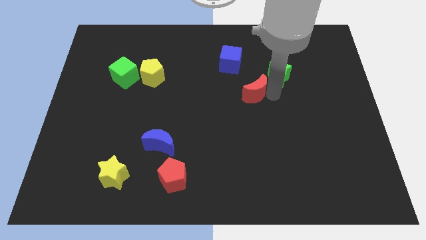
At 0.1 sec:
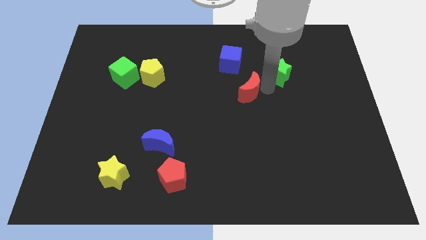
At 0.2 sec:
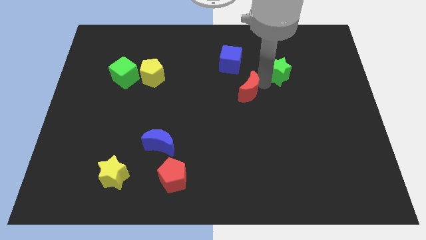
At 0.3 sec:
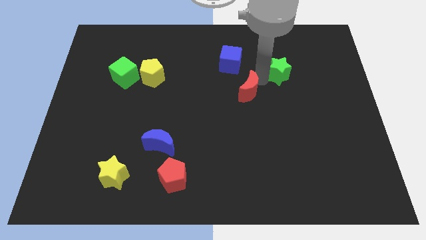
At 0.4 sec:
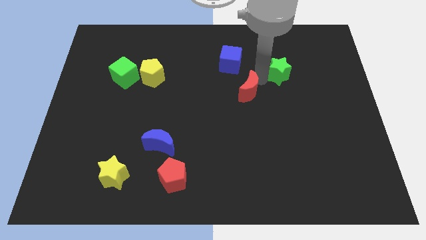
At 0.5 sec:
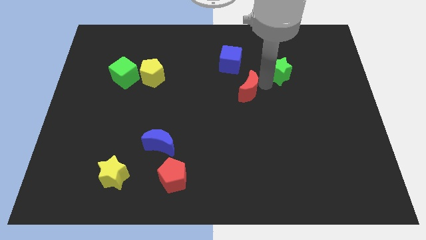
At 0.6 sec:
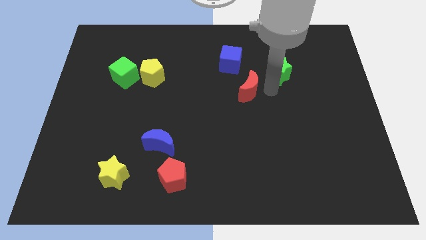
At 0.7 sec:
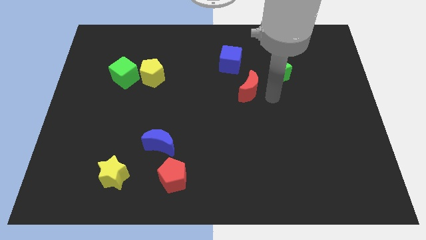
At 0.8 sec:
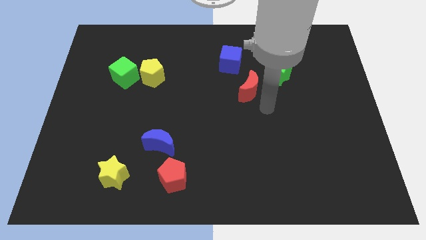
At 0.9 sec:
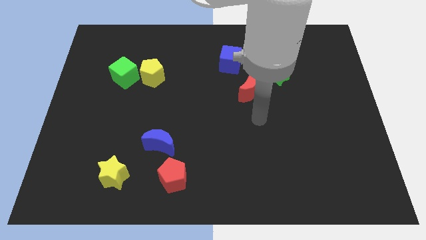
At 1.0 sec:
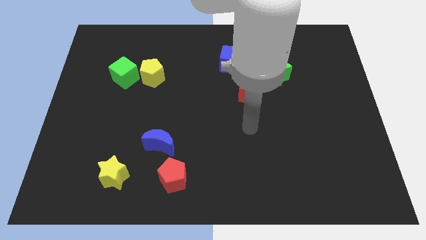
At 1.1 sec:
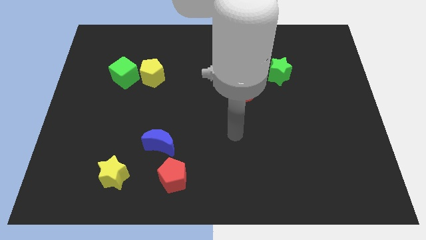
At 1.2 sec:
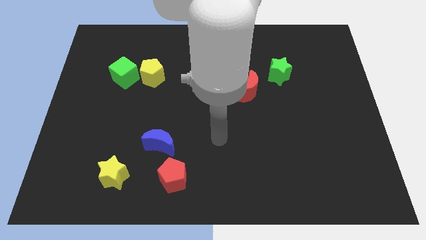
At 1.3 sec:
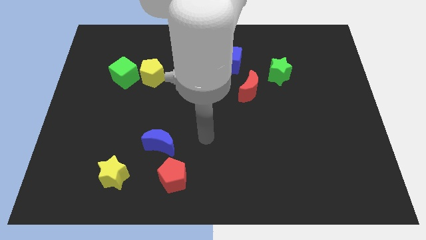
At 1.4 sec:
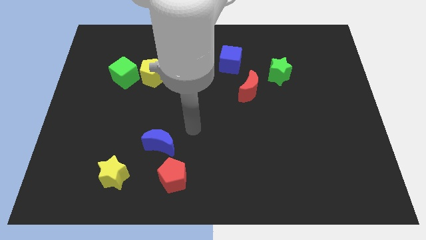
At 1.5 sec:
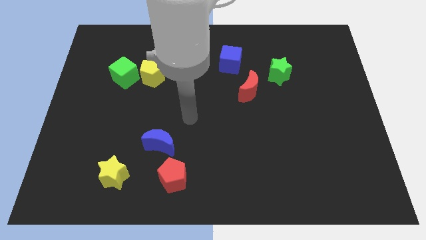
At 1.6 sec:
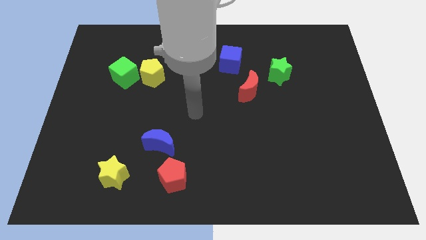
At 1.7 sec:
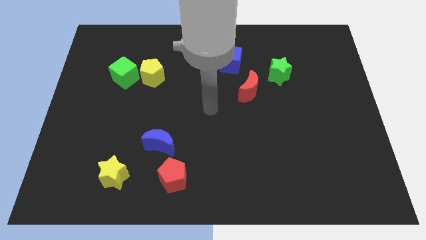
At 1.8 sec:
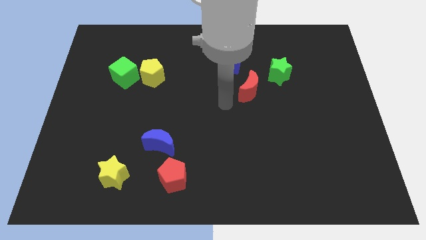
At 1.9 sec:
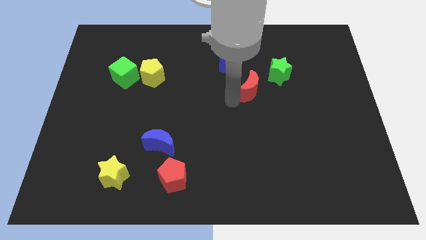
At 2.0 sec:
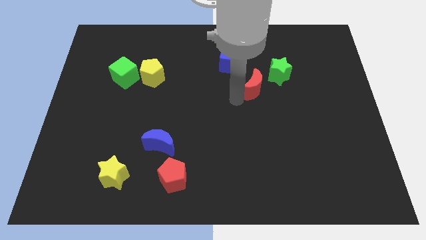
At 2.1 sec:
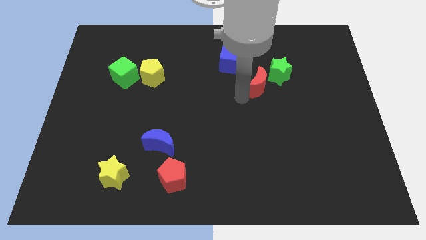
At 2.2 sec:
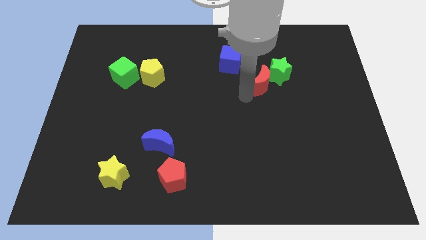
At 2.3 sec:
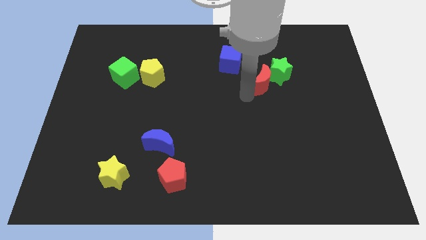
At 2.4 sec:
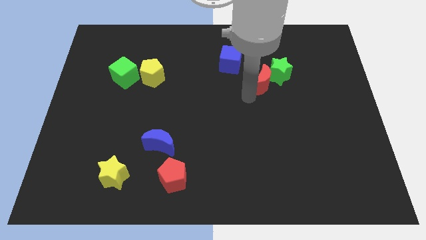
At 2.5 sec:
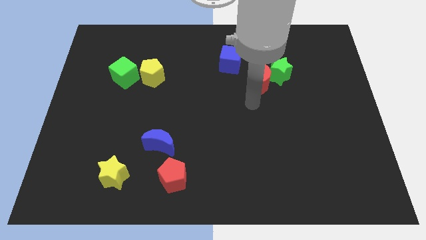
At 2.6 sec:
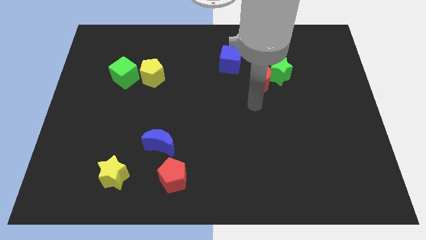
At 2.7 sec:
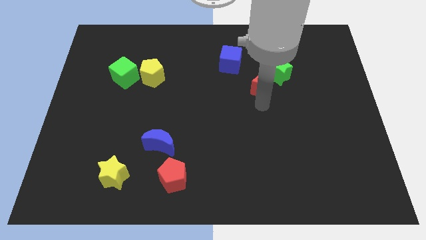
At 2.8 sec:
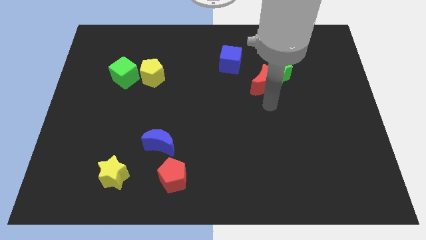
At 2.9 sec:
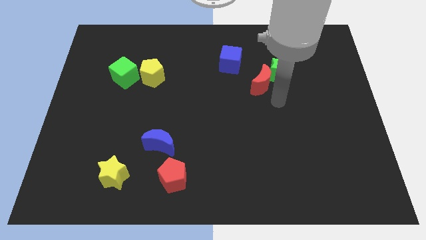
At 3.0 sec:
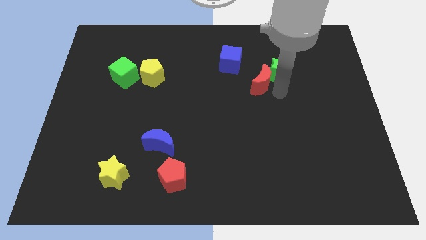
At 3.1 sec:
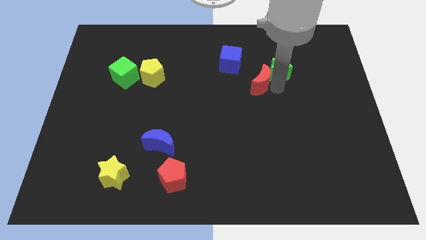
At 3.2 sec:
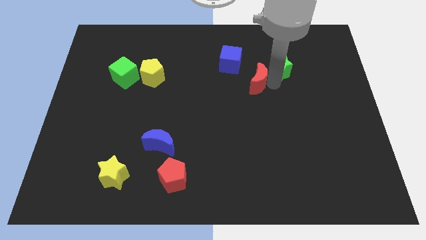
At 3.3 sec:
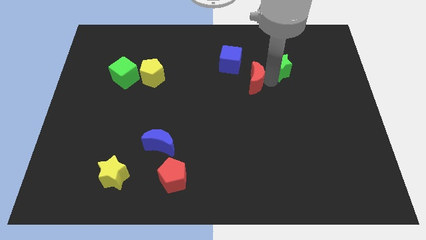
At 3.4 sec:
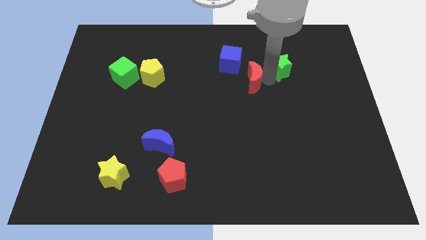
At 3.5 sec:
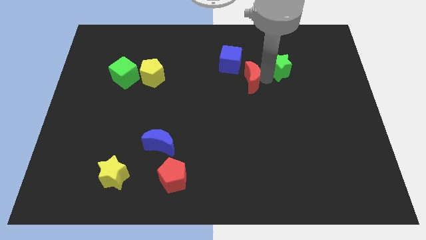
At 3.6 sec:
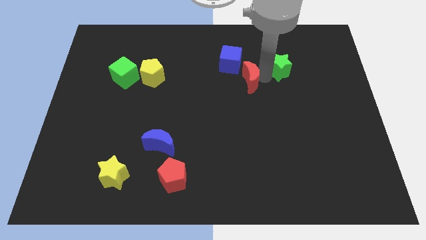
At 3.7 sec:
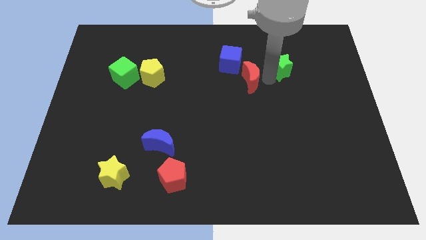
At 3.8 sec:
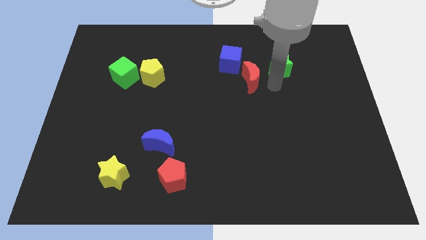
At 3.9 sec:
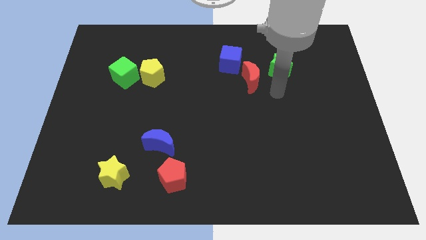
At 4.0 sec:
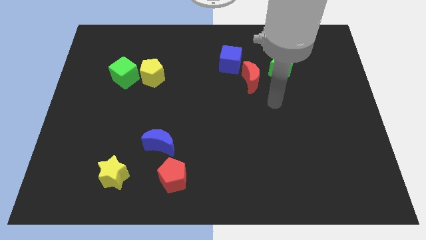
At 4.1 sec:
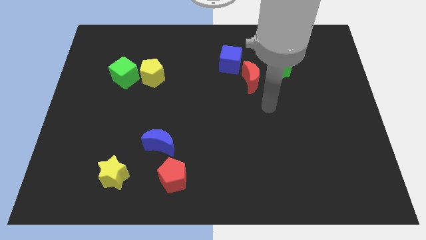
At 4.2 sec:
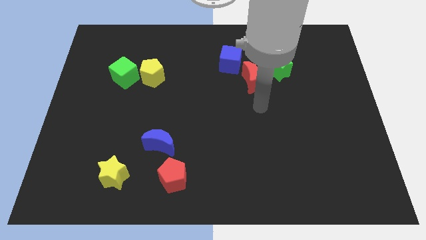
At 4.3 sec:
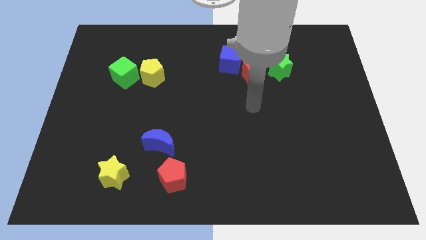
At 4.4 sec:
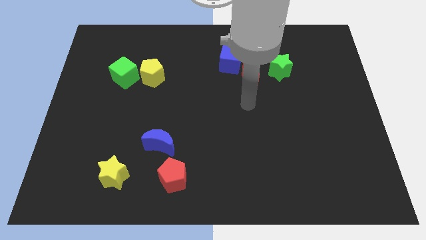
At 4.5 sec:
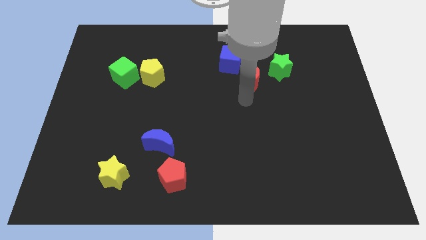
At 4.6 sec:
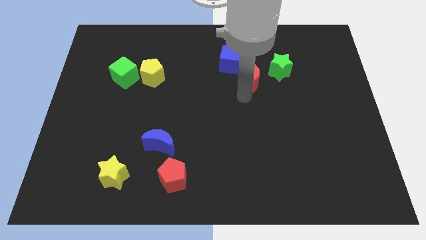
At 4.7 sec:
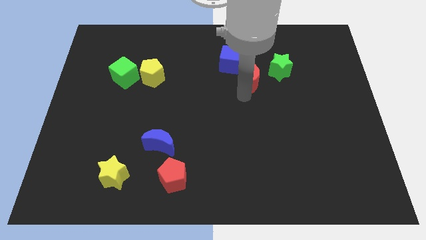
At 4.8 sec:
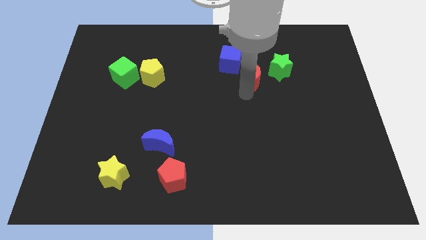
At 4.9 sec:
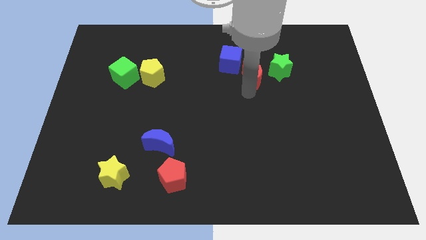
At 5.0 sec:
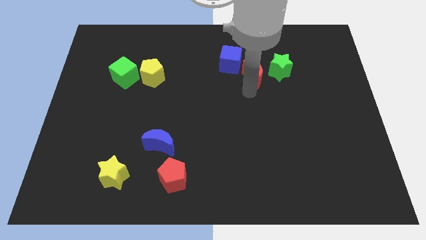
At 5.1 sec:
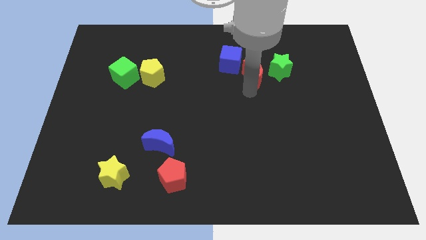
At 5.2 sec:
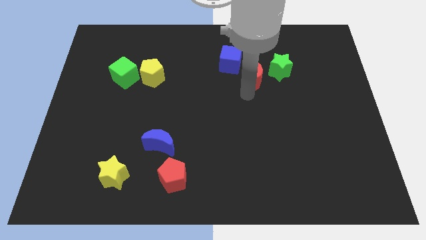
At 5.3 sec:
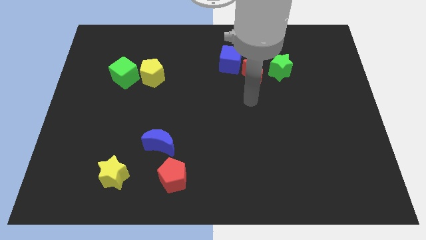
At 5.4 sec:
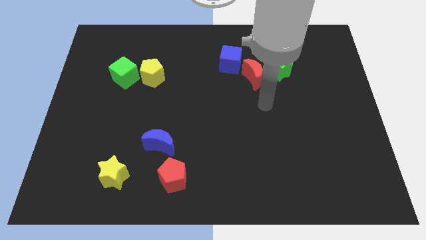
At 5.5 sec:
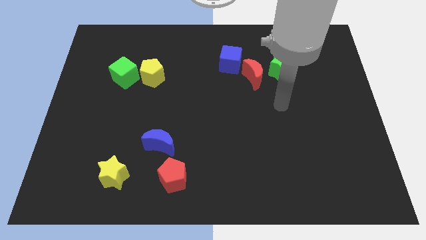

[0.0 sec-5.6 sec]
move the red moon to the bottom right of the blue cube

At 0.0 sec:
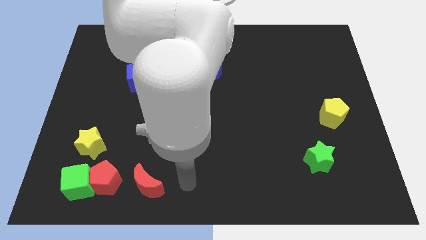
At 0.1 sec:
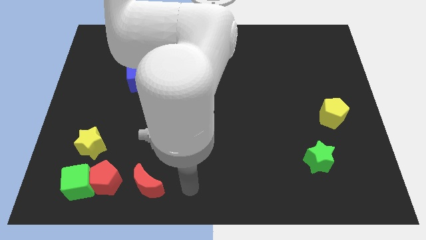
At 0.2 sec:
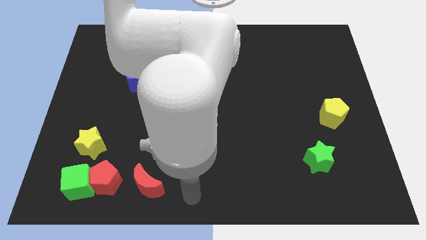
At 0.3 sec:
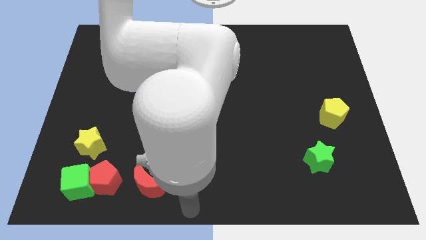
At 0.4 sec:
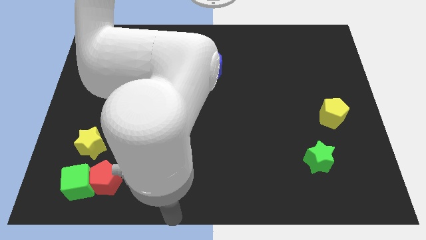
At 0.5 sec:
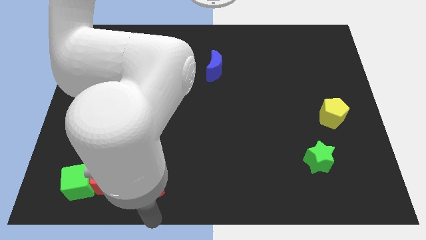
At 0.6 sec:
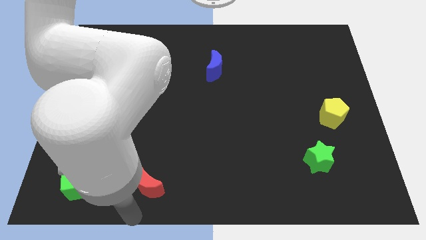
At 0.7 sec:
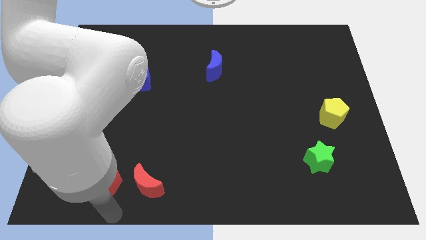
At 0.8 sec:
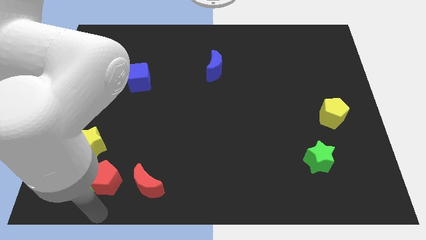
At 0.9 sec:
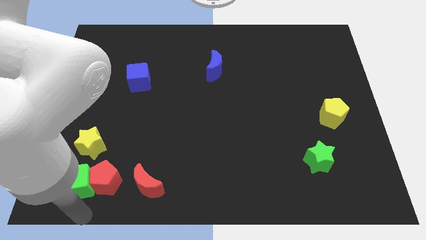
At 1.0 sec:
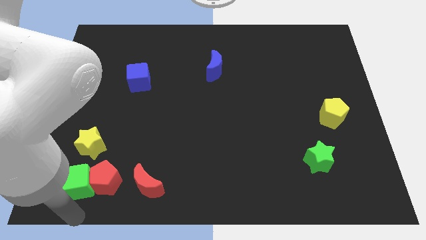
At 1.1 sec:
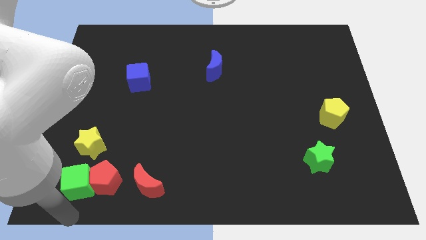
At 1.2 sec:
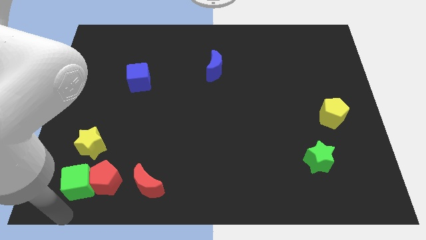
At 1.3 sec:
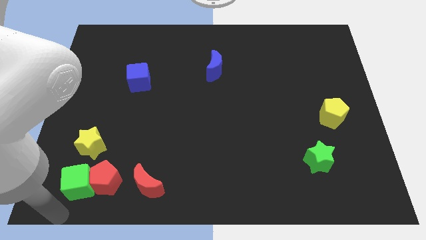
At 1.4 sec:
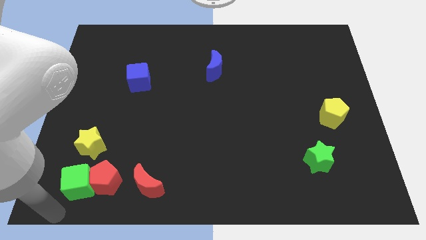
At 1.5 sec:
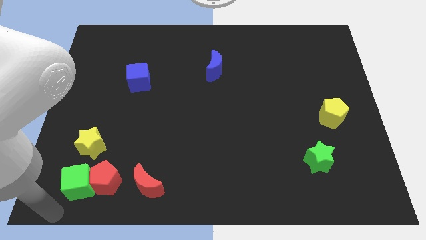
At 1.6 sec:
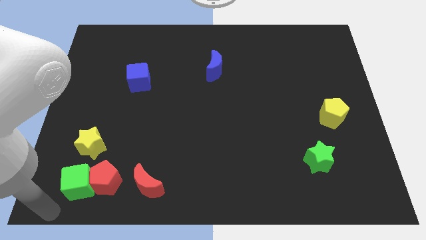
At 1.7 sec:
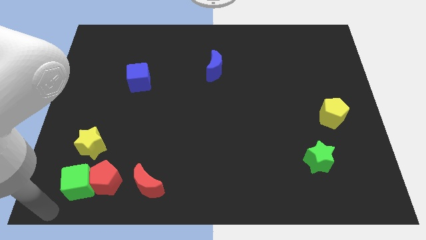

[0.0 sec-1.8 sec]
move your arm close to the green cube

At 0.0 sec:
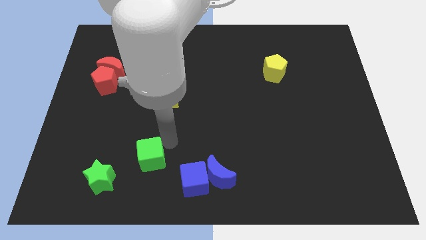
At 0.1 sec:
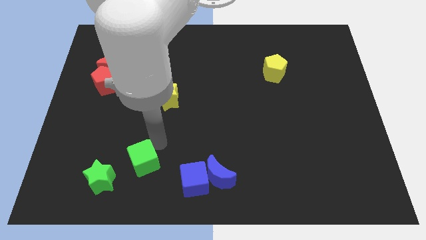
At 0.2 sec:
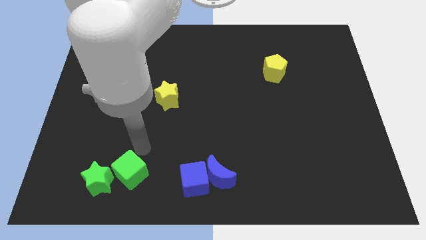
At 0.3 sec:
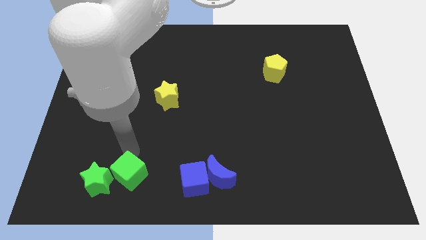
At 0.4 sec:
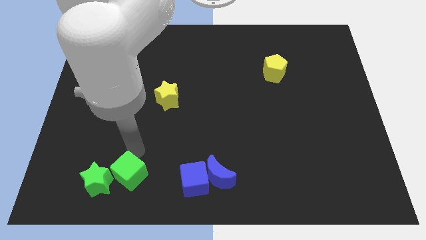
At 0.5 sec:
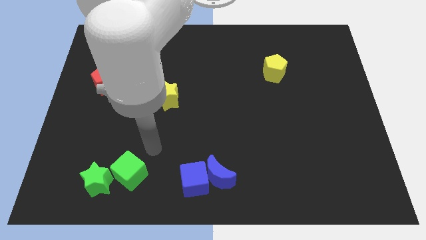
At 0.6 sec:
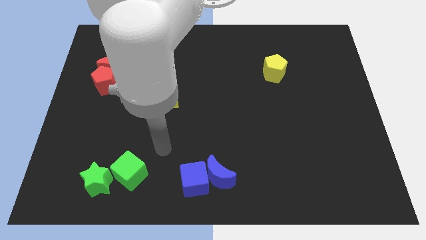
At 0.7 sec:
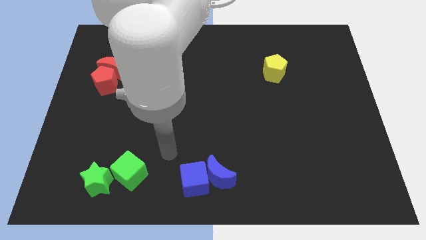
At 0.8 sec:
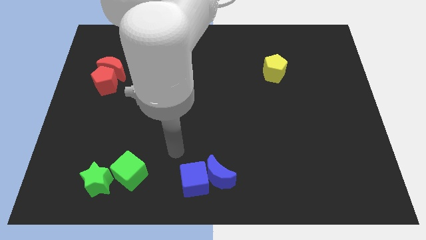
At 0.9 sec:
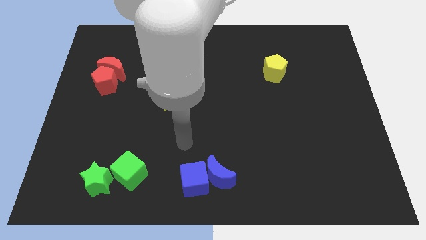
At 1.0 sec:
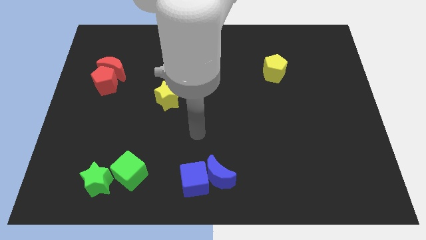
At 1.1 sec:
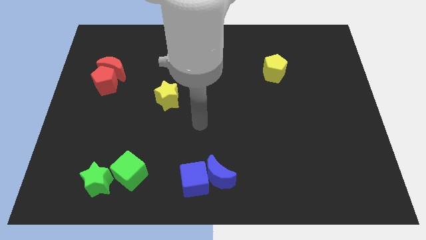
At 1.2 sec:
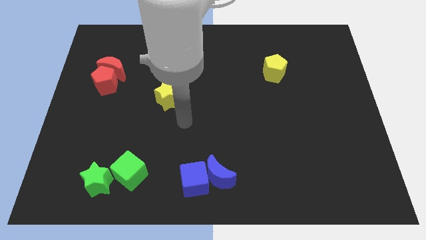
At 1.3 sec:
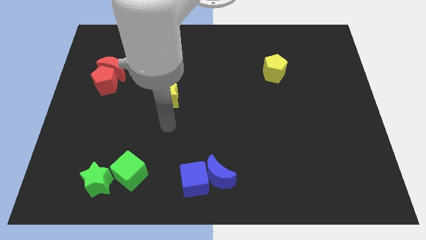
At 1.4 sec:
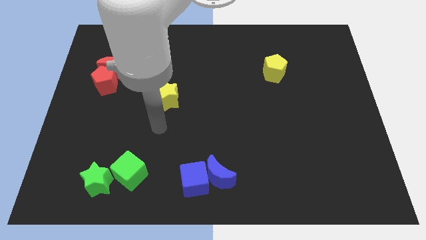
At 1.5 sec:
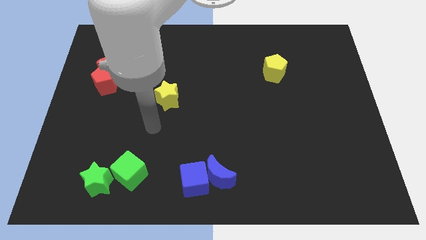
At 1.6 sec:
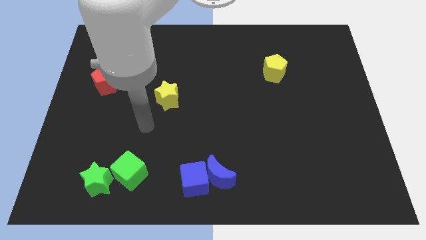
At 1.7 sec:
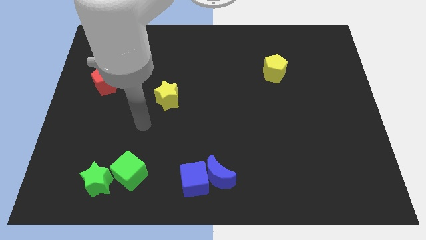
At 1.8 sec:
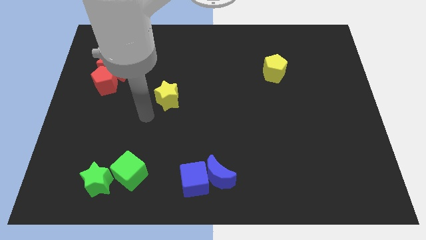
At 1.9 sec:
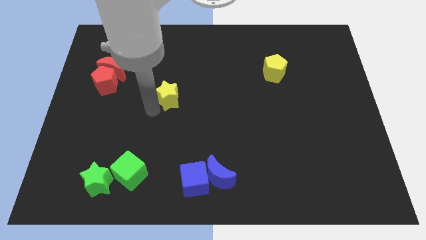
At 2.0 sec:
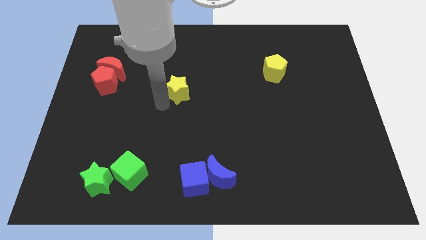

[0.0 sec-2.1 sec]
place the green cube close to green star
